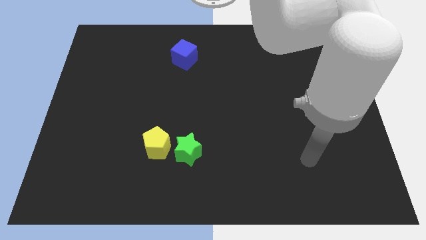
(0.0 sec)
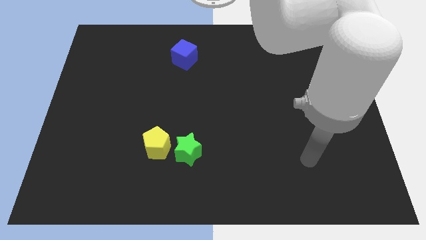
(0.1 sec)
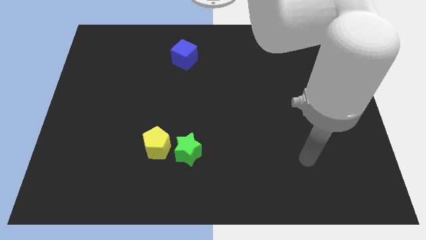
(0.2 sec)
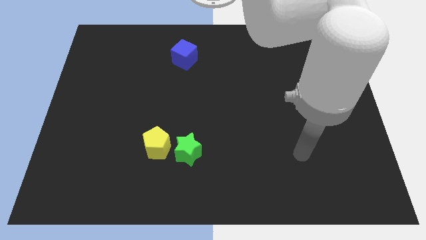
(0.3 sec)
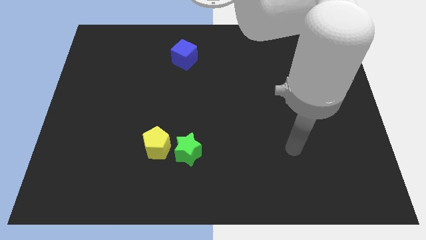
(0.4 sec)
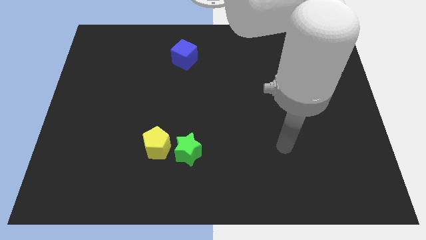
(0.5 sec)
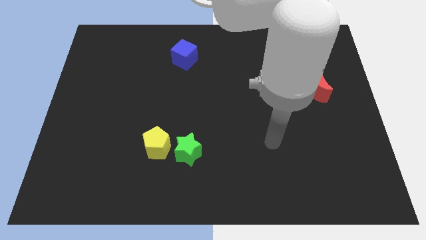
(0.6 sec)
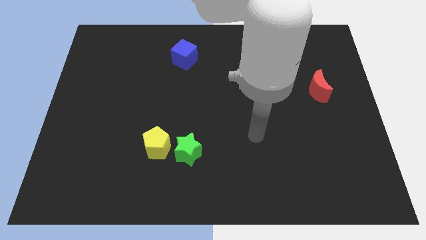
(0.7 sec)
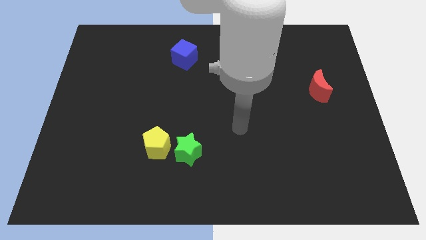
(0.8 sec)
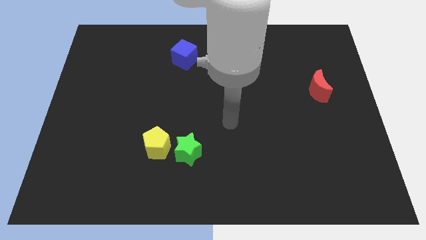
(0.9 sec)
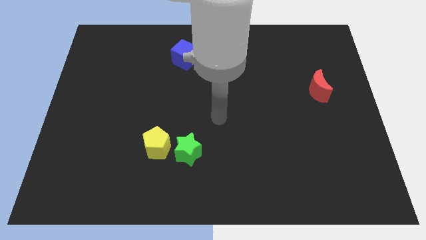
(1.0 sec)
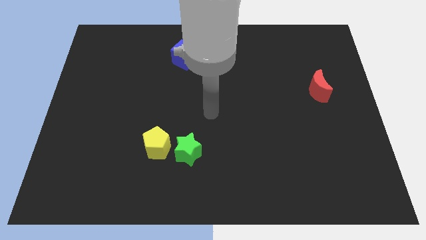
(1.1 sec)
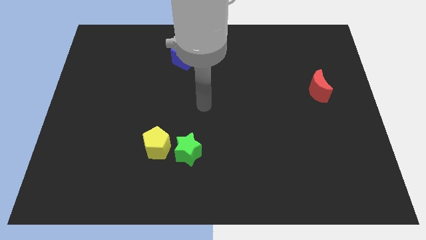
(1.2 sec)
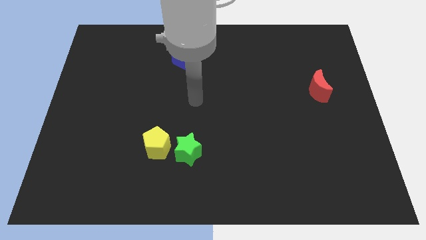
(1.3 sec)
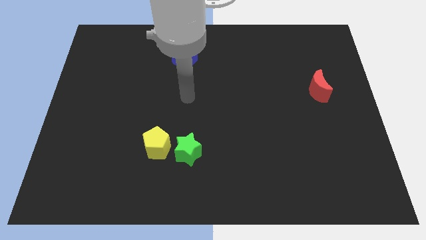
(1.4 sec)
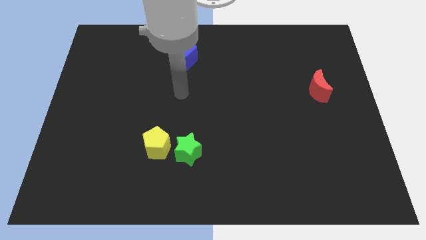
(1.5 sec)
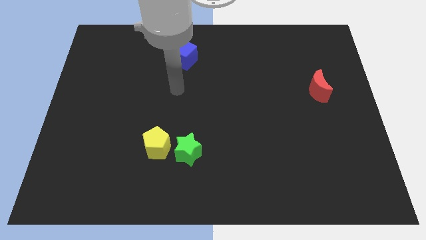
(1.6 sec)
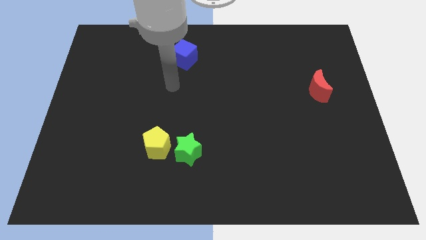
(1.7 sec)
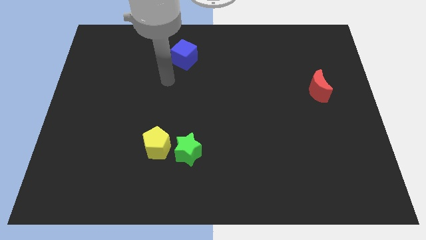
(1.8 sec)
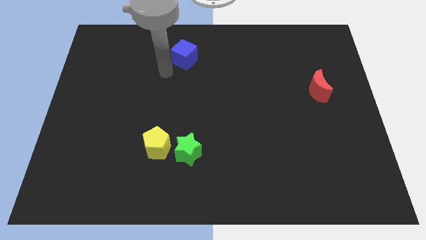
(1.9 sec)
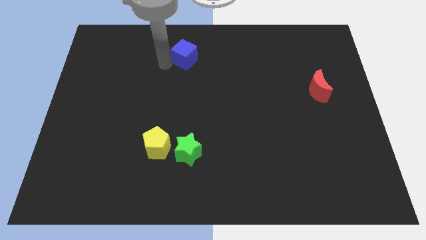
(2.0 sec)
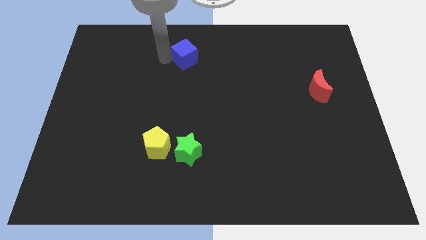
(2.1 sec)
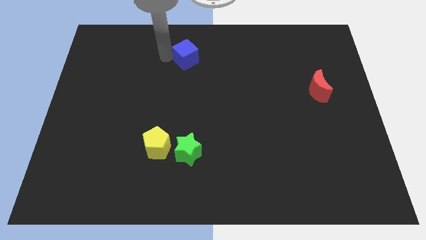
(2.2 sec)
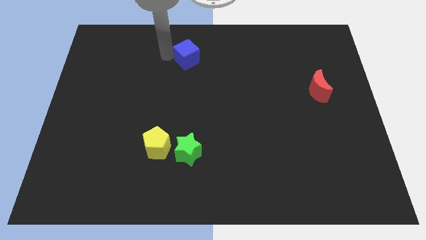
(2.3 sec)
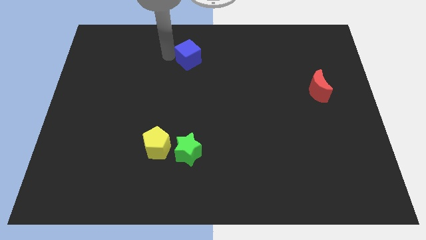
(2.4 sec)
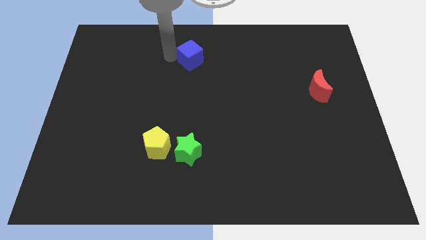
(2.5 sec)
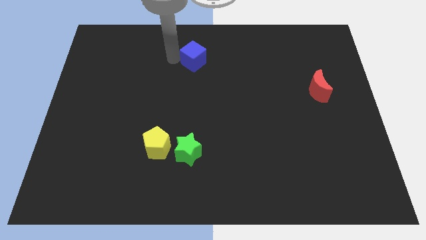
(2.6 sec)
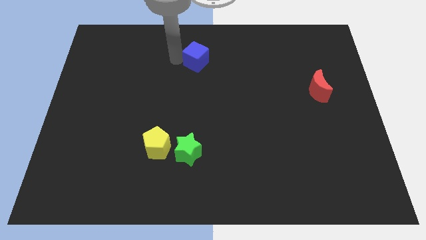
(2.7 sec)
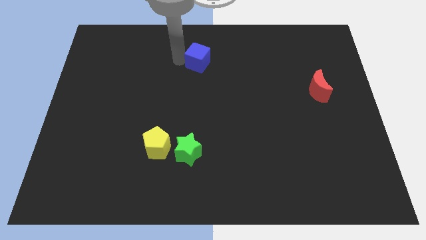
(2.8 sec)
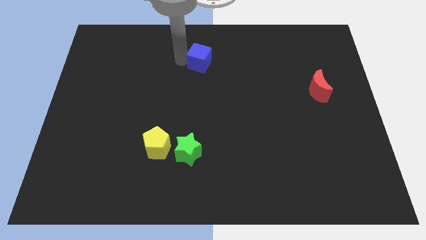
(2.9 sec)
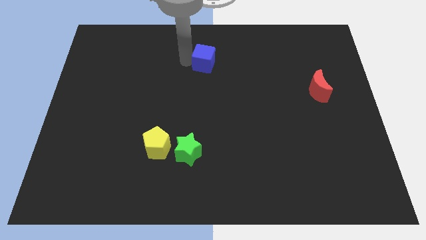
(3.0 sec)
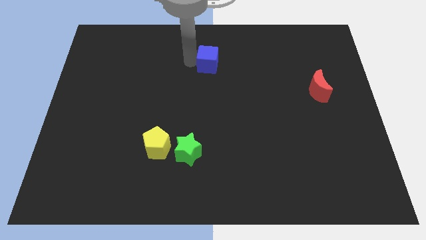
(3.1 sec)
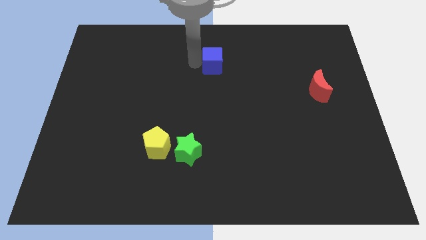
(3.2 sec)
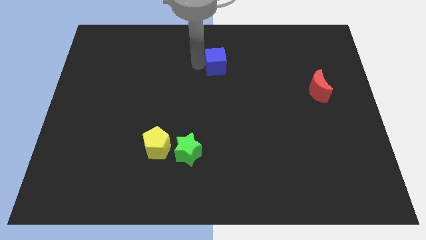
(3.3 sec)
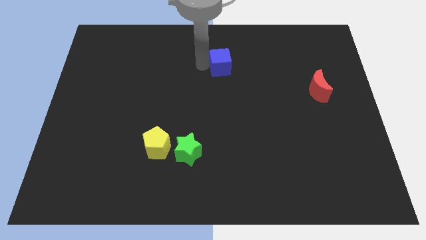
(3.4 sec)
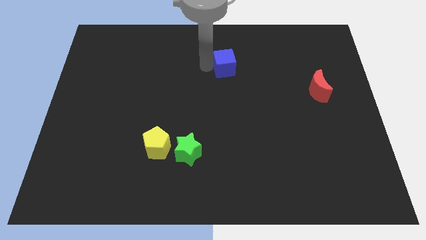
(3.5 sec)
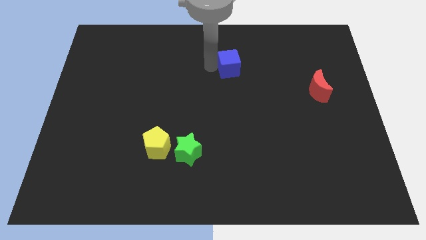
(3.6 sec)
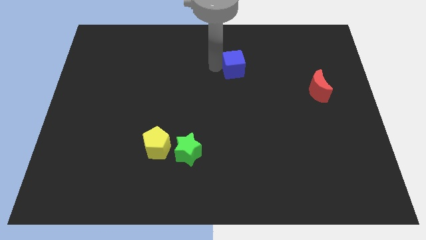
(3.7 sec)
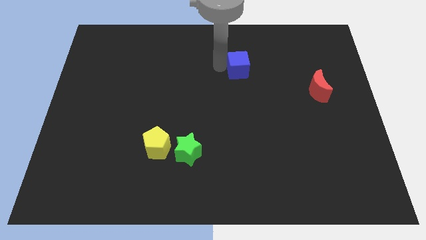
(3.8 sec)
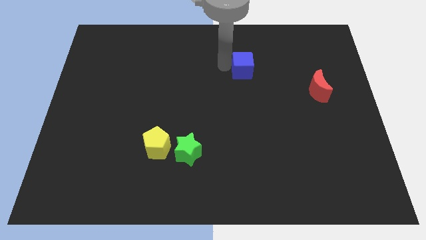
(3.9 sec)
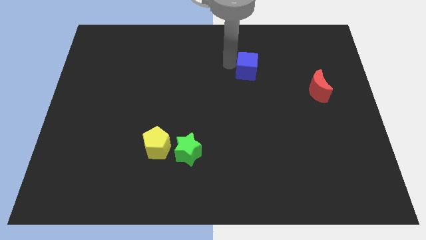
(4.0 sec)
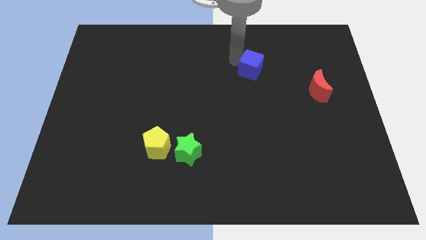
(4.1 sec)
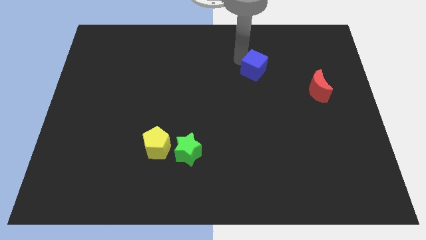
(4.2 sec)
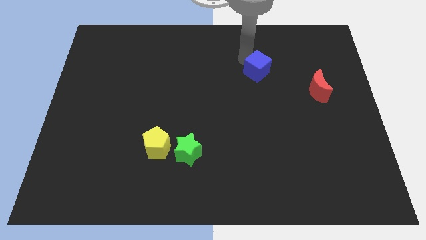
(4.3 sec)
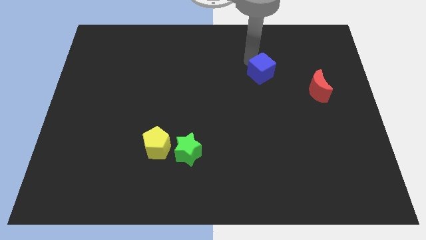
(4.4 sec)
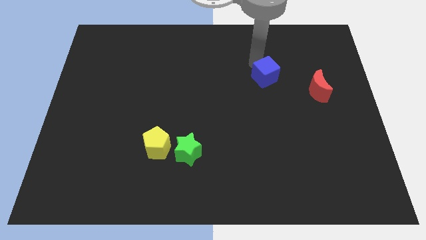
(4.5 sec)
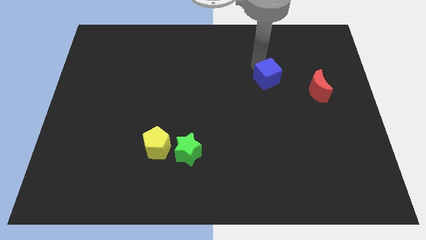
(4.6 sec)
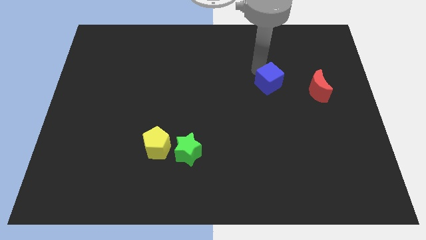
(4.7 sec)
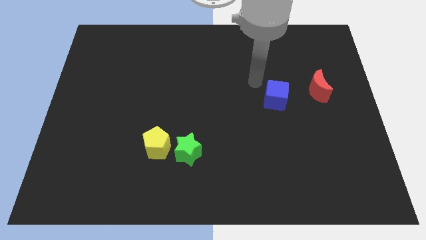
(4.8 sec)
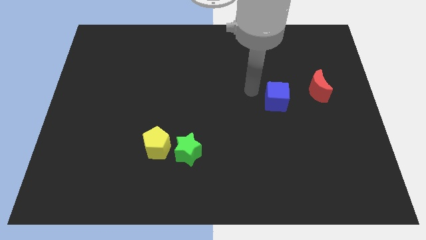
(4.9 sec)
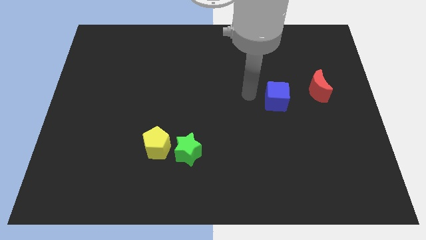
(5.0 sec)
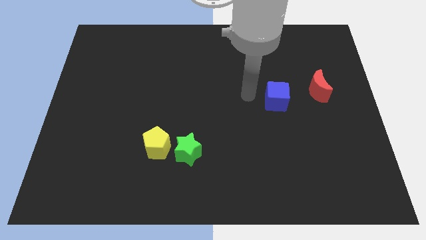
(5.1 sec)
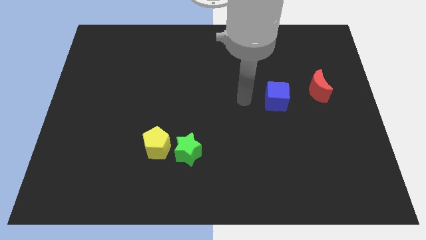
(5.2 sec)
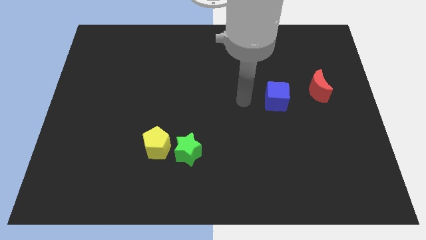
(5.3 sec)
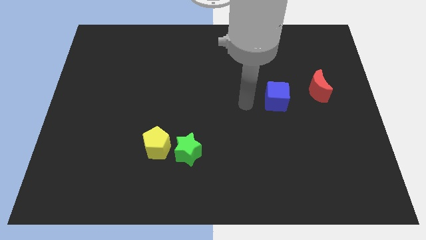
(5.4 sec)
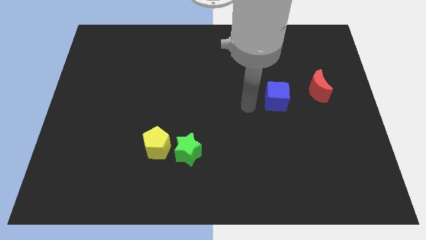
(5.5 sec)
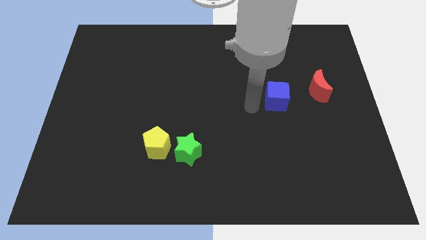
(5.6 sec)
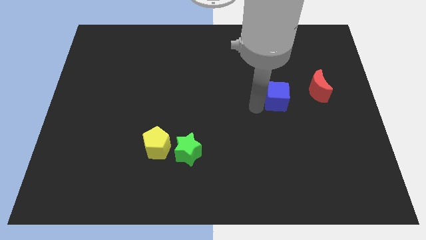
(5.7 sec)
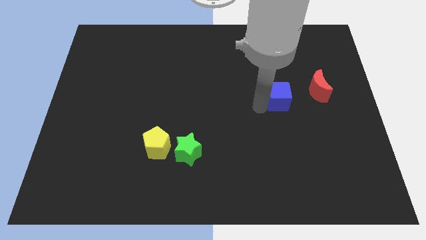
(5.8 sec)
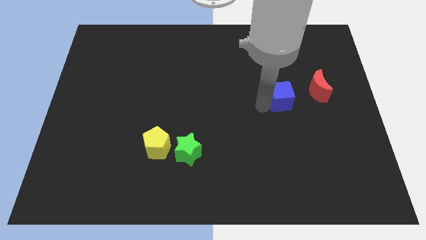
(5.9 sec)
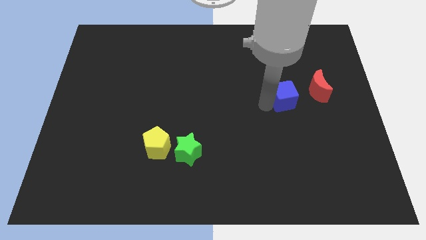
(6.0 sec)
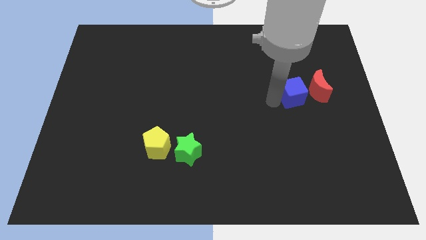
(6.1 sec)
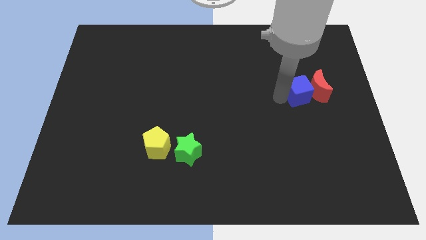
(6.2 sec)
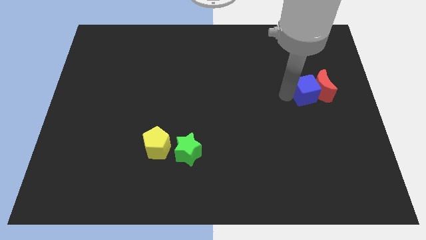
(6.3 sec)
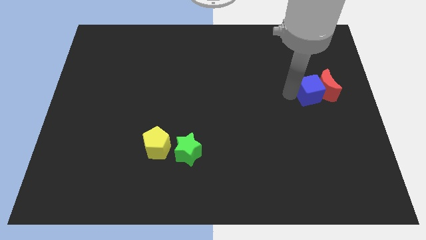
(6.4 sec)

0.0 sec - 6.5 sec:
put the blue block towards the red block

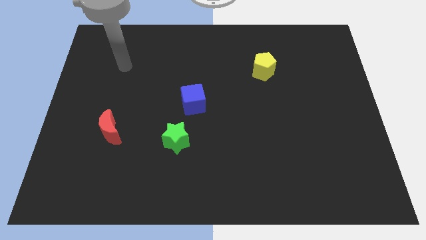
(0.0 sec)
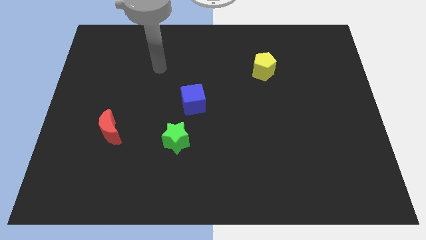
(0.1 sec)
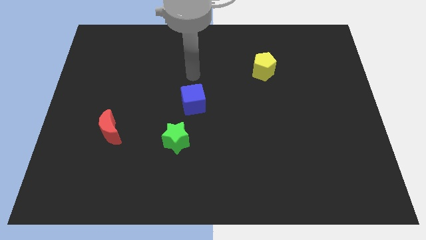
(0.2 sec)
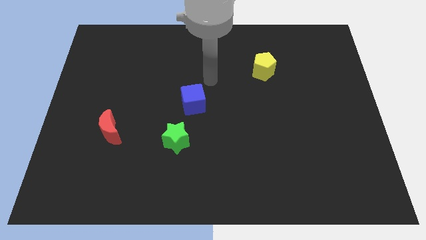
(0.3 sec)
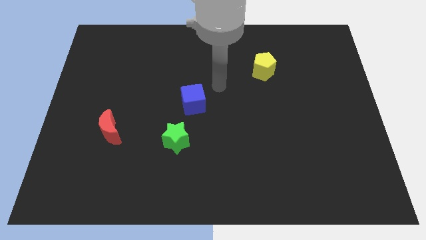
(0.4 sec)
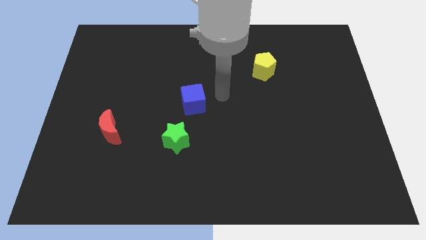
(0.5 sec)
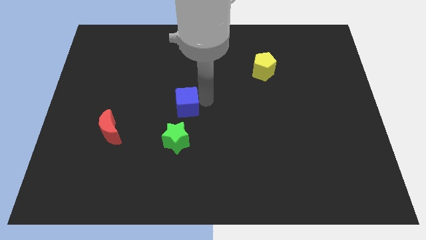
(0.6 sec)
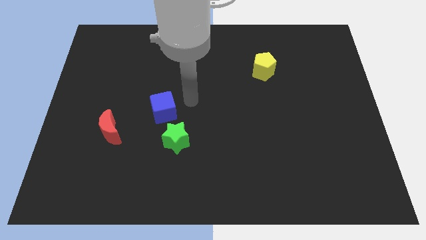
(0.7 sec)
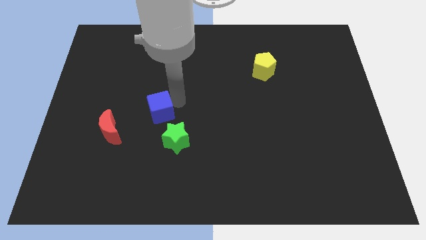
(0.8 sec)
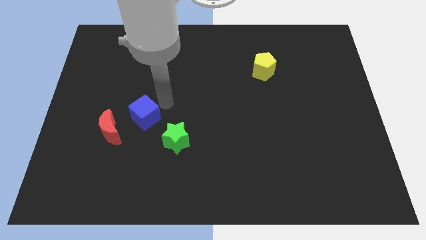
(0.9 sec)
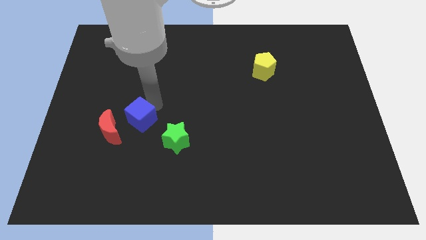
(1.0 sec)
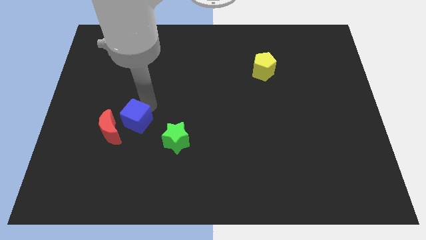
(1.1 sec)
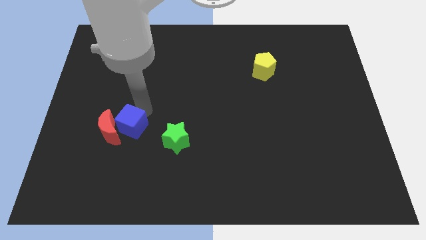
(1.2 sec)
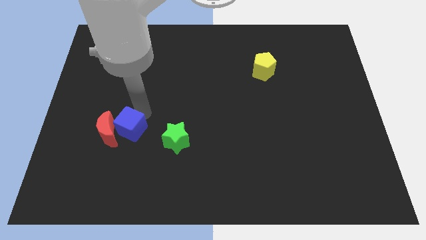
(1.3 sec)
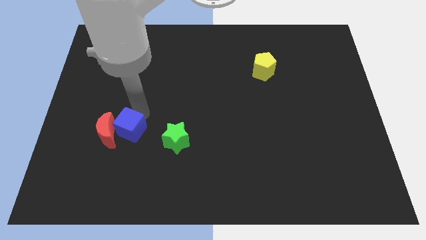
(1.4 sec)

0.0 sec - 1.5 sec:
put the blue cube to the red moon

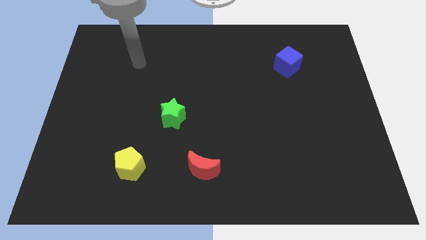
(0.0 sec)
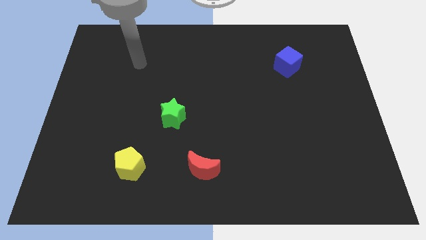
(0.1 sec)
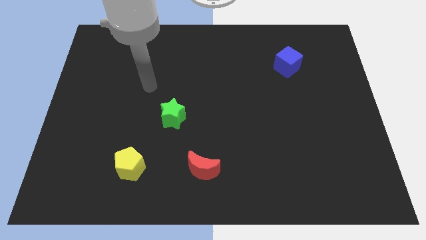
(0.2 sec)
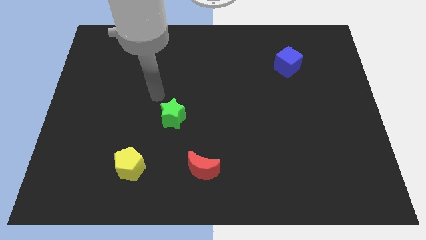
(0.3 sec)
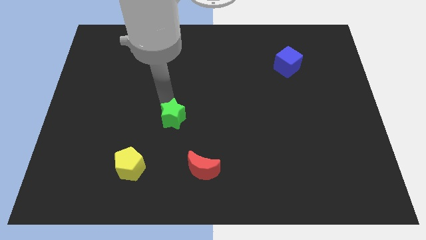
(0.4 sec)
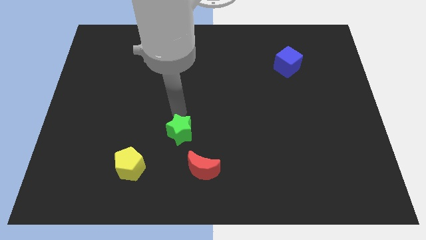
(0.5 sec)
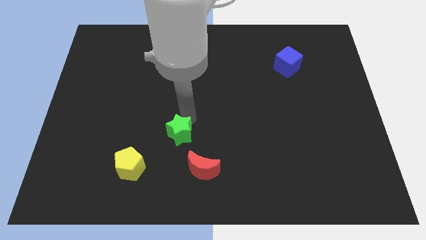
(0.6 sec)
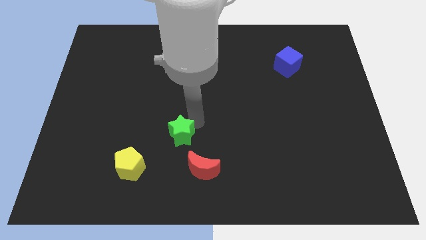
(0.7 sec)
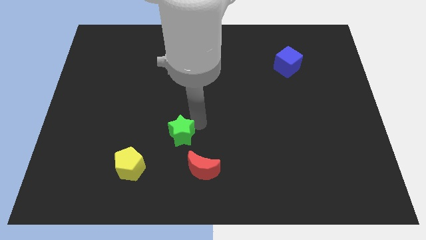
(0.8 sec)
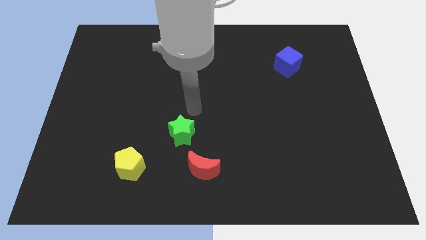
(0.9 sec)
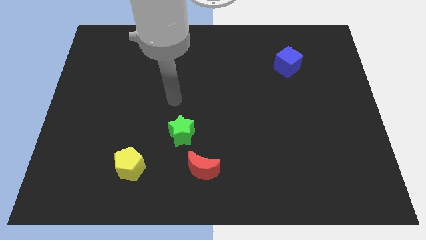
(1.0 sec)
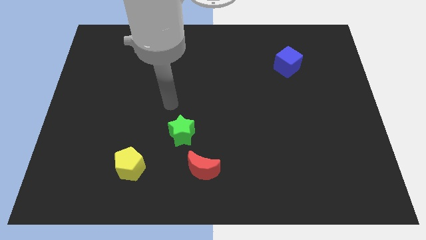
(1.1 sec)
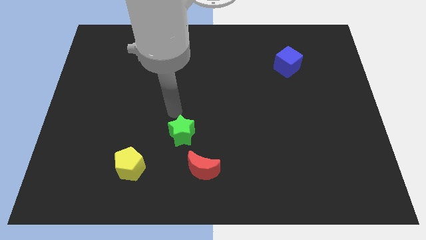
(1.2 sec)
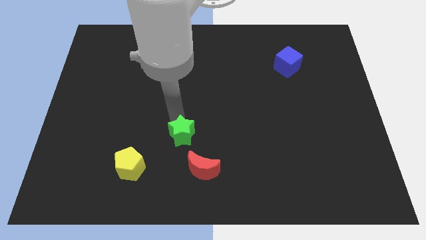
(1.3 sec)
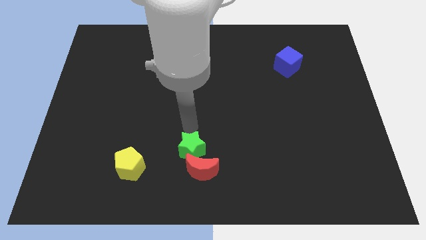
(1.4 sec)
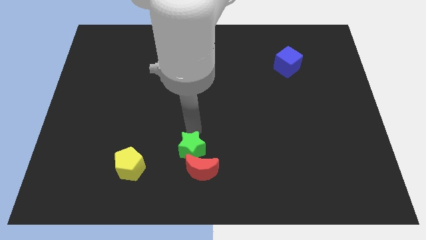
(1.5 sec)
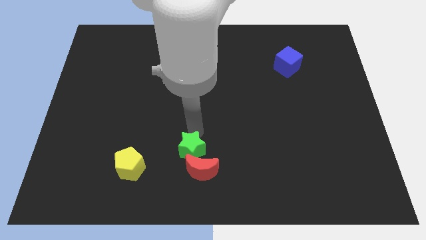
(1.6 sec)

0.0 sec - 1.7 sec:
push the green star to the red block
